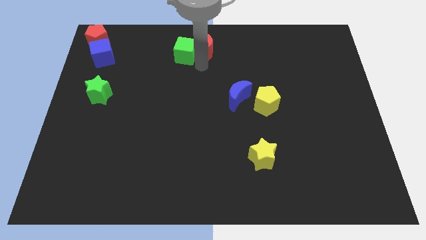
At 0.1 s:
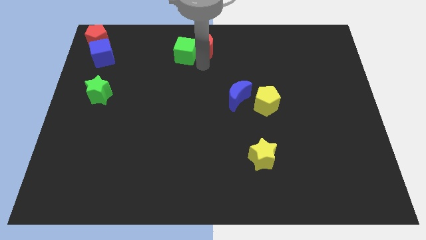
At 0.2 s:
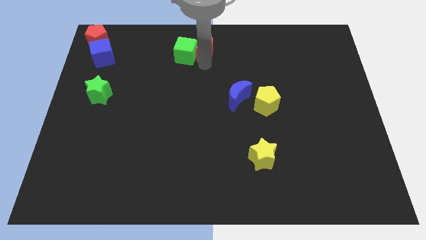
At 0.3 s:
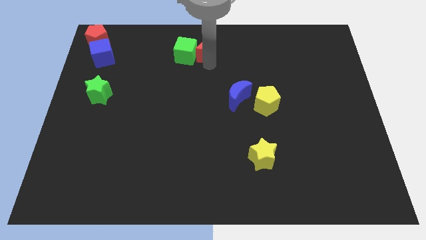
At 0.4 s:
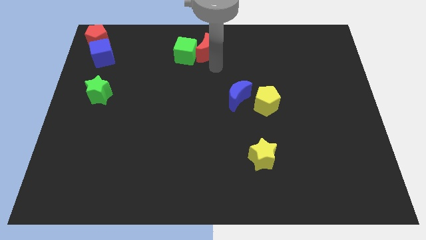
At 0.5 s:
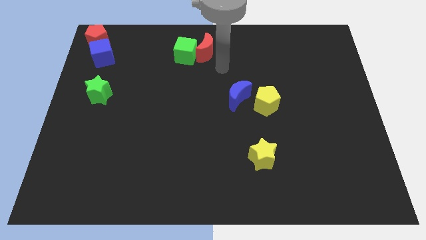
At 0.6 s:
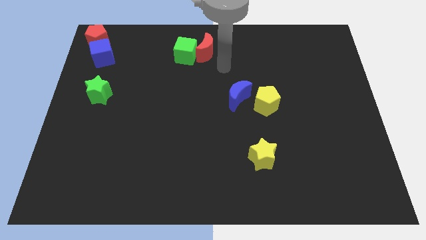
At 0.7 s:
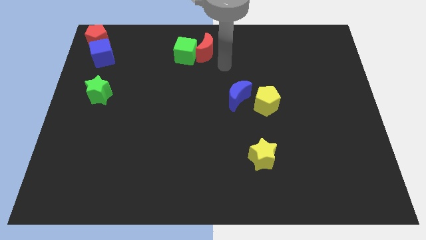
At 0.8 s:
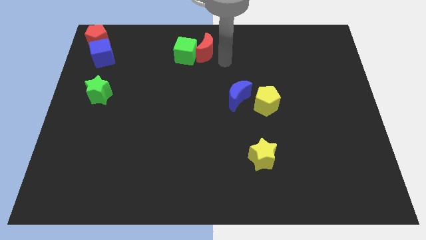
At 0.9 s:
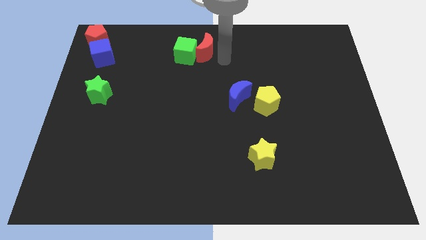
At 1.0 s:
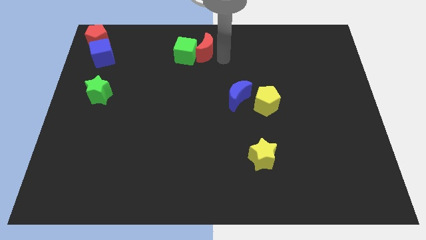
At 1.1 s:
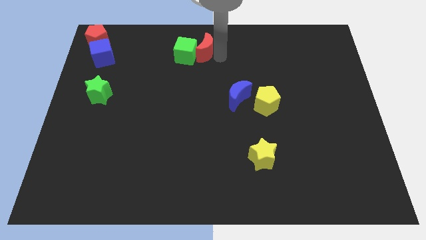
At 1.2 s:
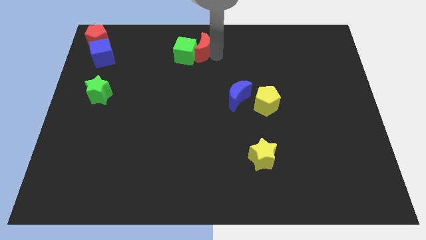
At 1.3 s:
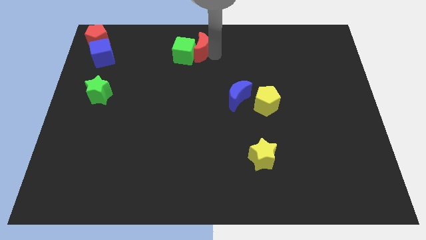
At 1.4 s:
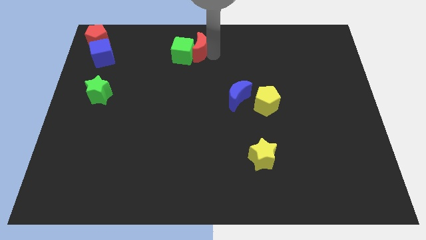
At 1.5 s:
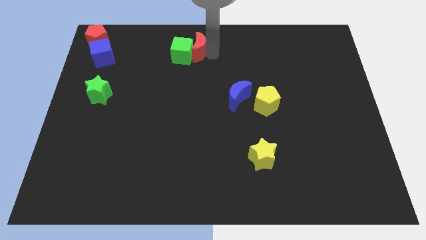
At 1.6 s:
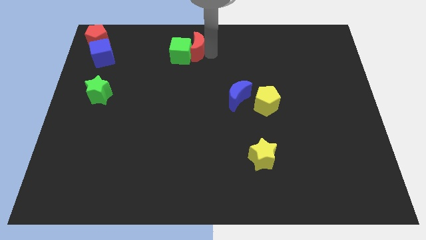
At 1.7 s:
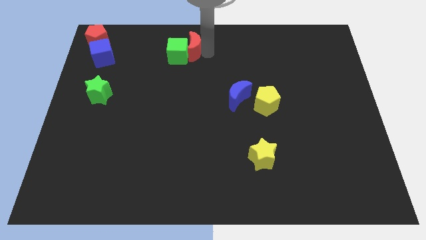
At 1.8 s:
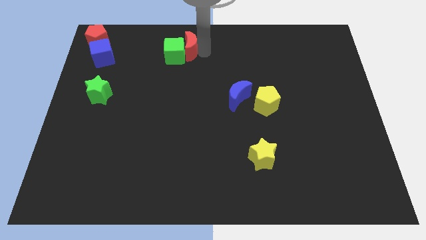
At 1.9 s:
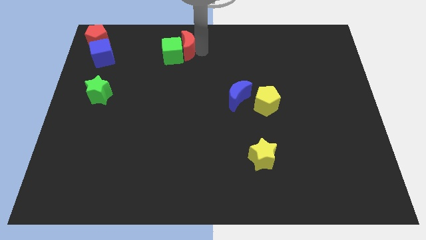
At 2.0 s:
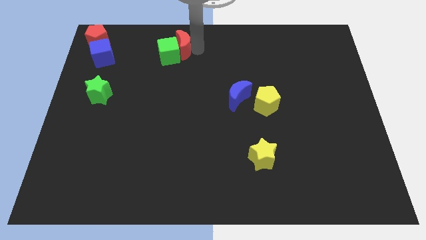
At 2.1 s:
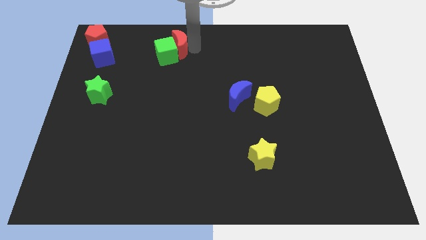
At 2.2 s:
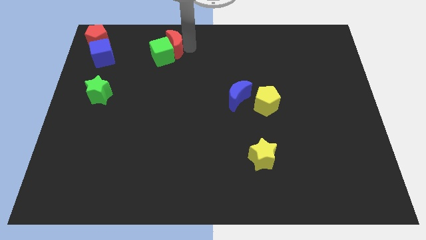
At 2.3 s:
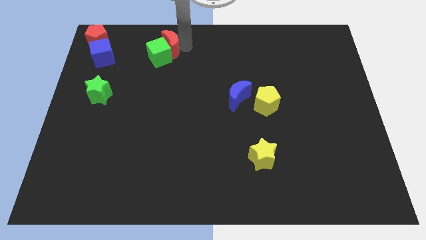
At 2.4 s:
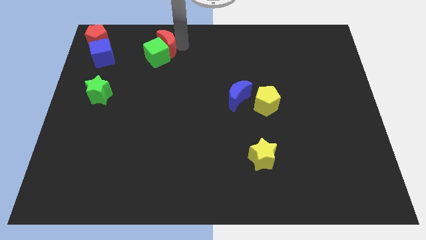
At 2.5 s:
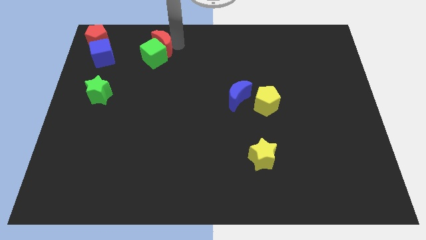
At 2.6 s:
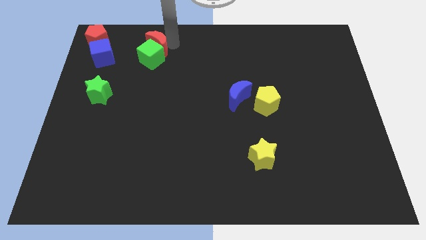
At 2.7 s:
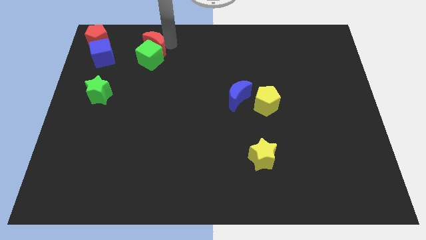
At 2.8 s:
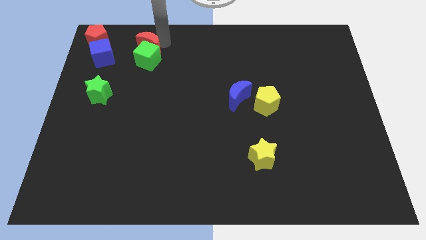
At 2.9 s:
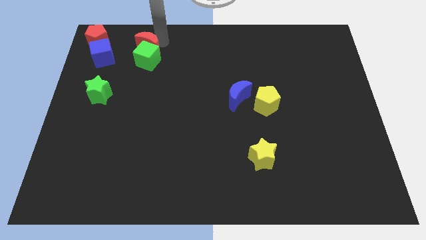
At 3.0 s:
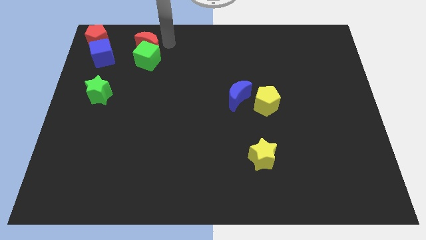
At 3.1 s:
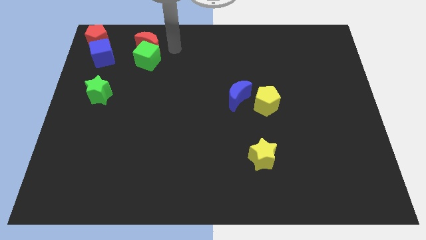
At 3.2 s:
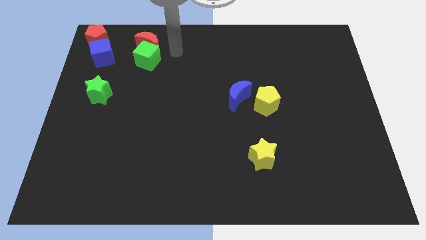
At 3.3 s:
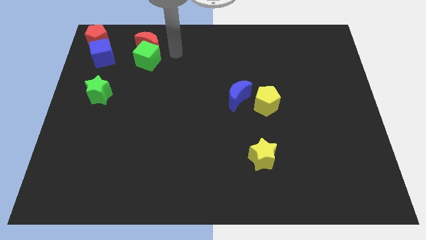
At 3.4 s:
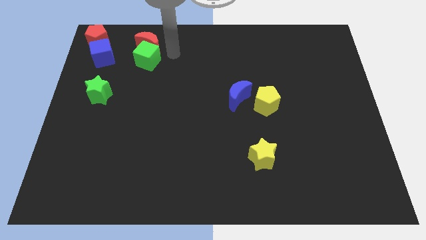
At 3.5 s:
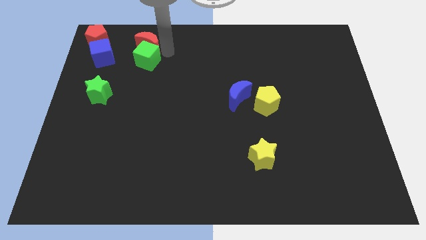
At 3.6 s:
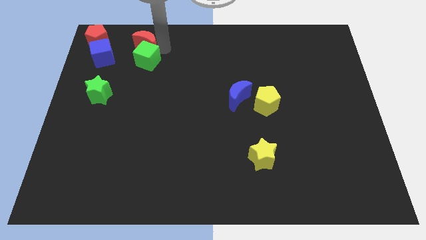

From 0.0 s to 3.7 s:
push the red moon and the green cube to the left side

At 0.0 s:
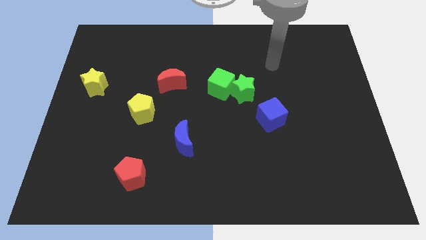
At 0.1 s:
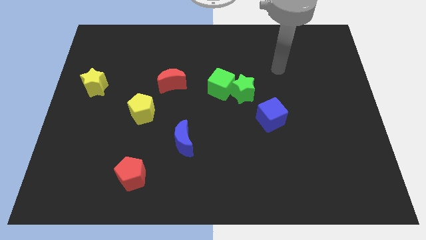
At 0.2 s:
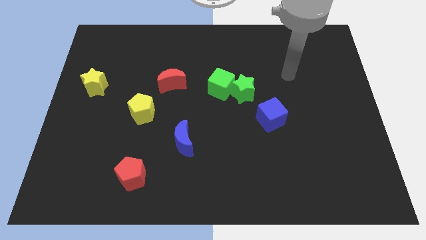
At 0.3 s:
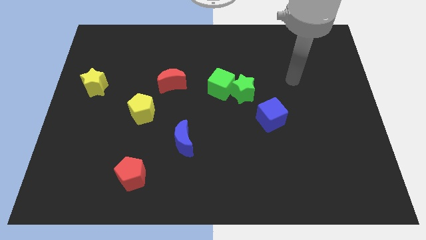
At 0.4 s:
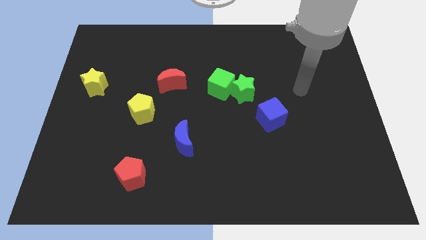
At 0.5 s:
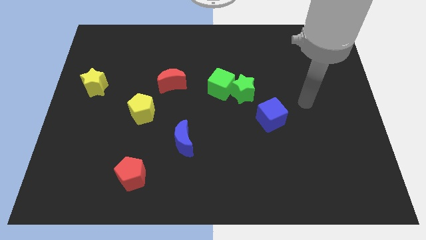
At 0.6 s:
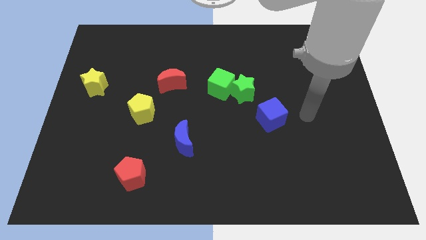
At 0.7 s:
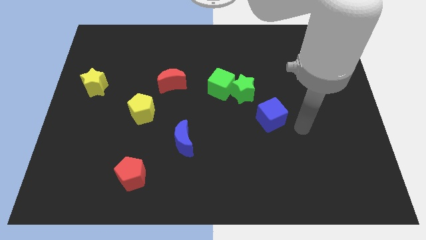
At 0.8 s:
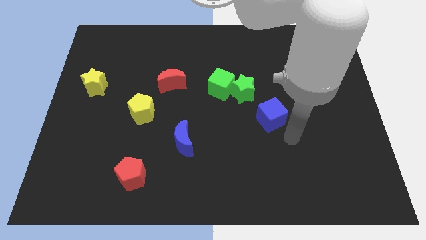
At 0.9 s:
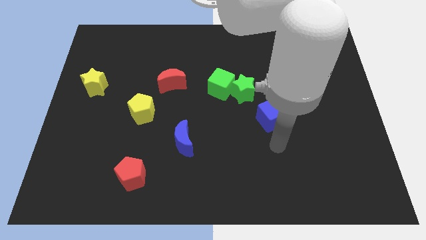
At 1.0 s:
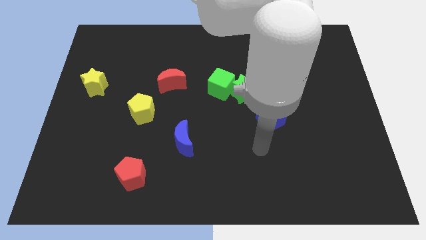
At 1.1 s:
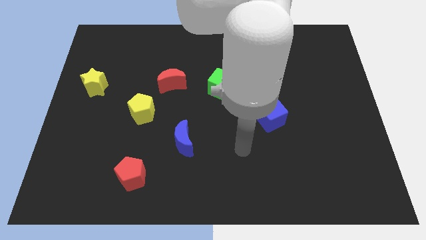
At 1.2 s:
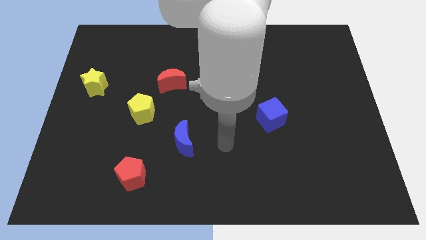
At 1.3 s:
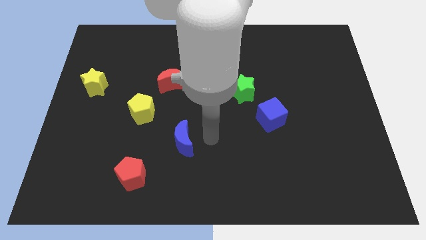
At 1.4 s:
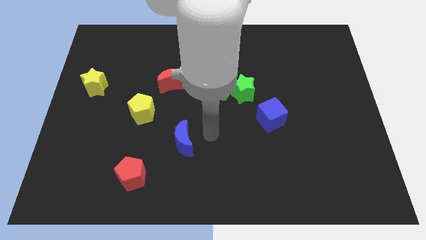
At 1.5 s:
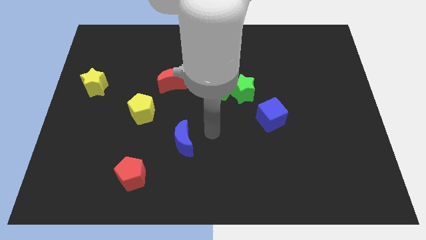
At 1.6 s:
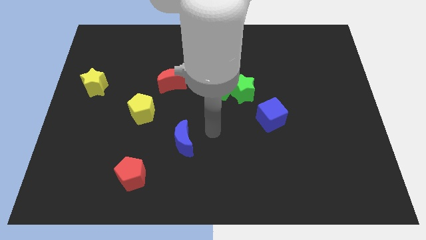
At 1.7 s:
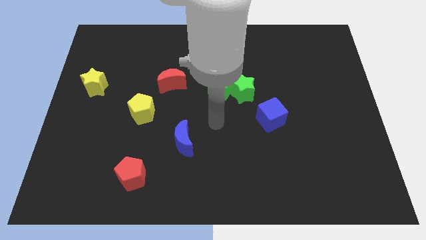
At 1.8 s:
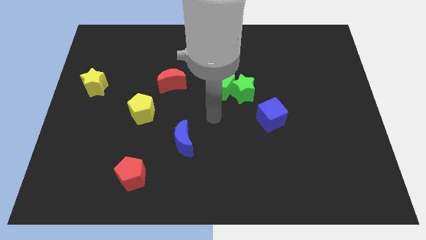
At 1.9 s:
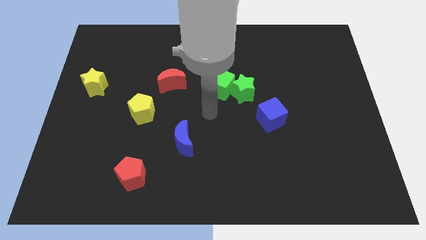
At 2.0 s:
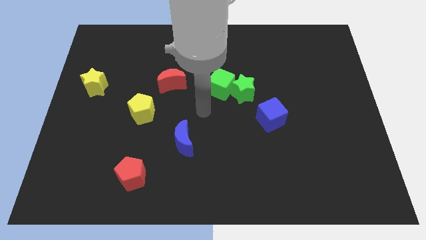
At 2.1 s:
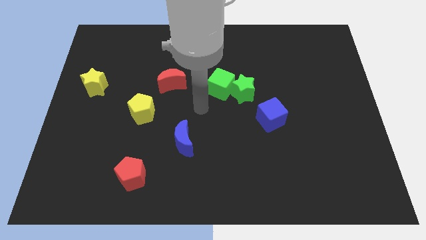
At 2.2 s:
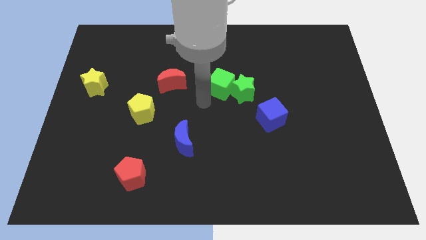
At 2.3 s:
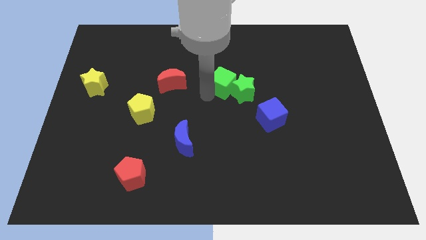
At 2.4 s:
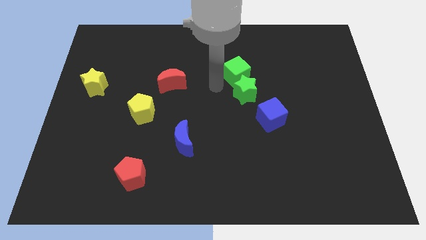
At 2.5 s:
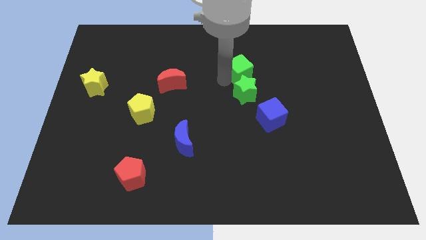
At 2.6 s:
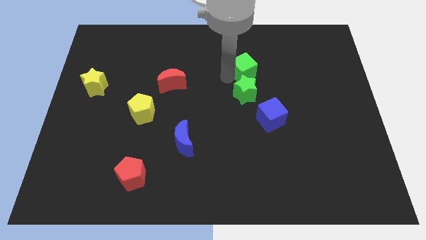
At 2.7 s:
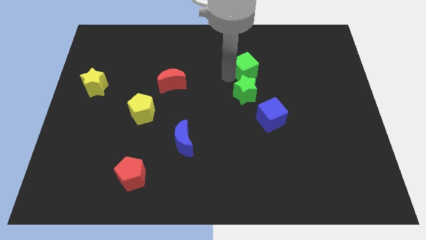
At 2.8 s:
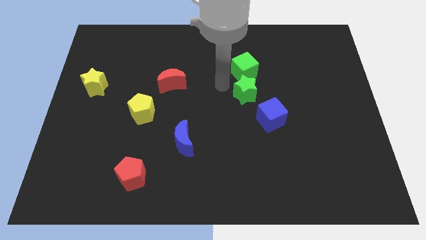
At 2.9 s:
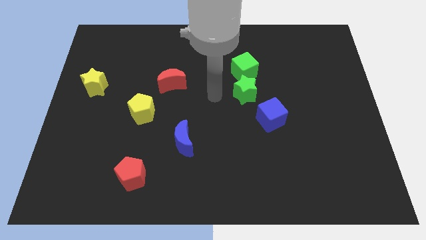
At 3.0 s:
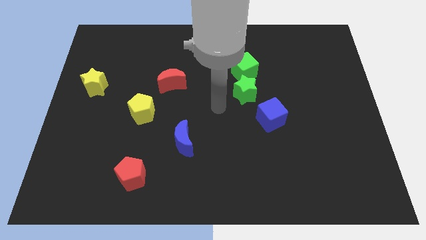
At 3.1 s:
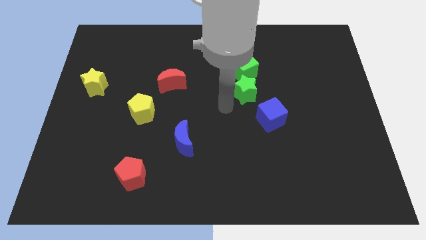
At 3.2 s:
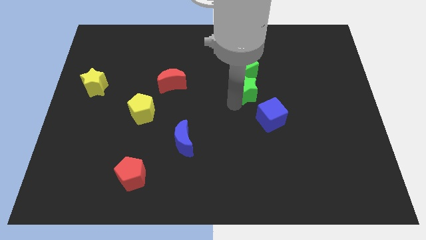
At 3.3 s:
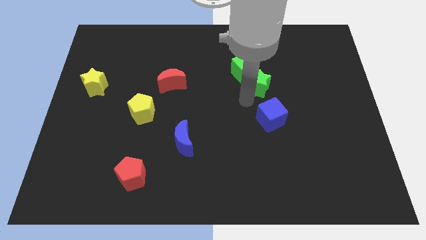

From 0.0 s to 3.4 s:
place the green star in between the green cube and blue cube

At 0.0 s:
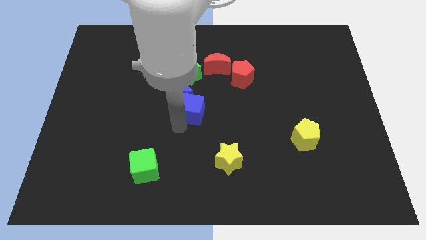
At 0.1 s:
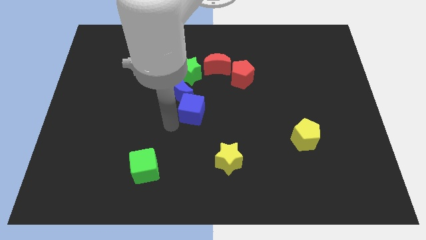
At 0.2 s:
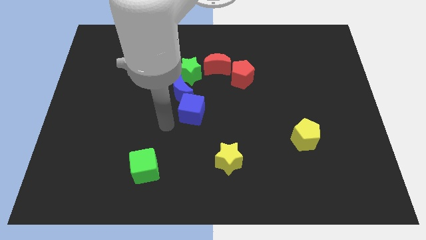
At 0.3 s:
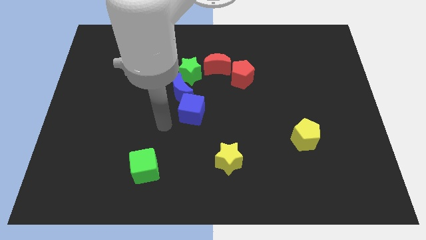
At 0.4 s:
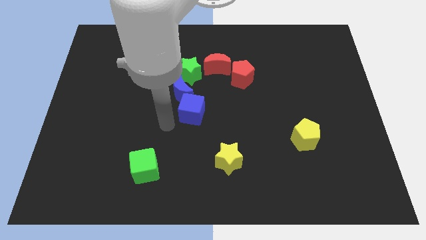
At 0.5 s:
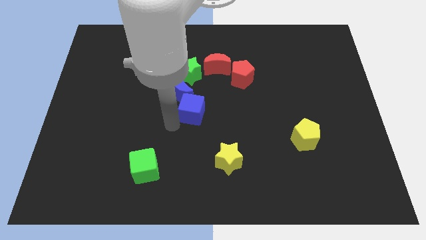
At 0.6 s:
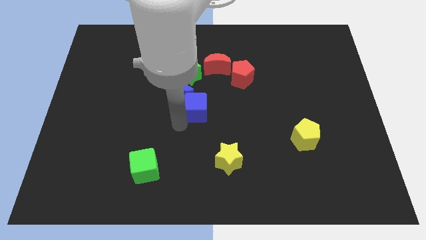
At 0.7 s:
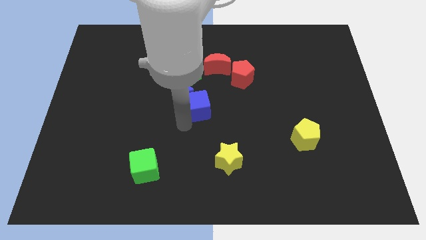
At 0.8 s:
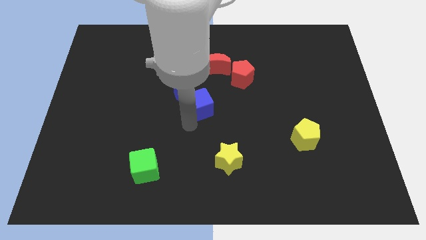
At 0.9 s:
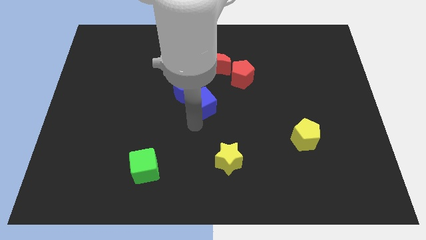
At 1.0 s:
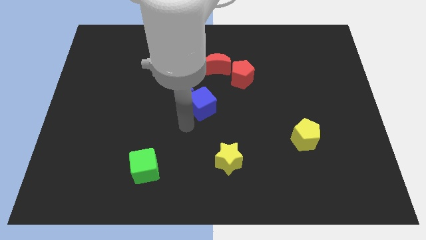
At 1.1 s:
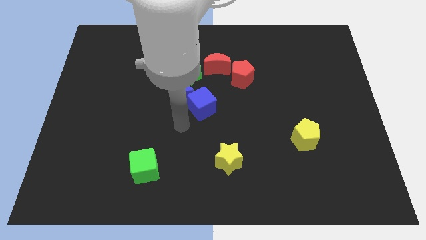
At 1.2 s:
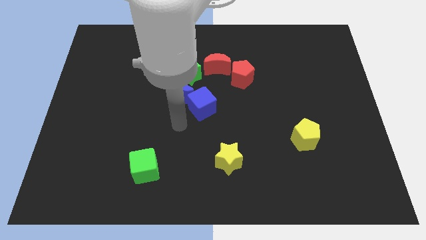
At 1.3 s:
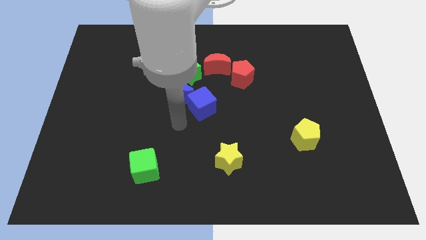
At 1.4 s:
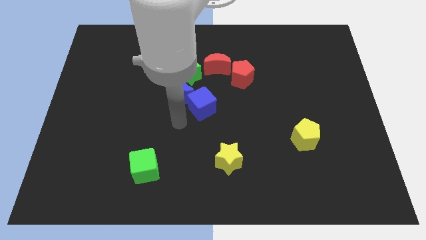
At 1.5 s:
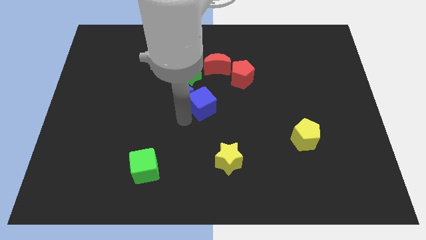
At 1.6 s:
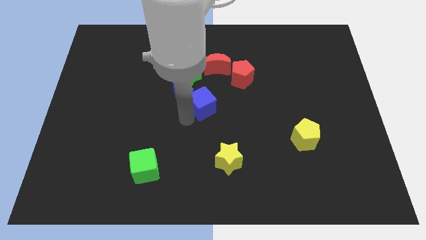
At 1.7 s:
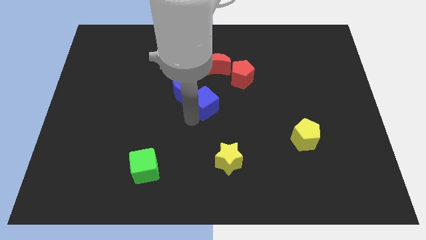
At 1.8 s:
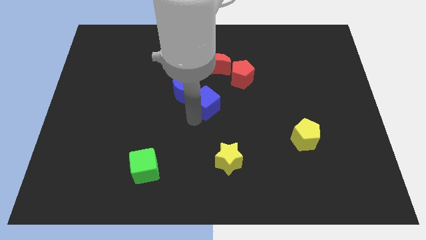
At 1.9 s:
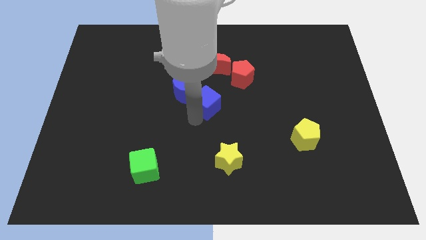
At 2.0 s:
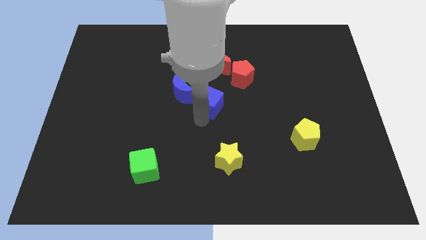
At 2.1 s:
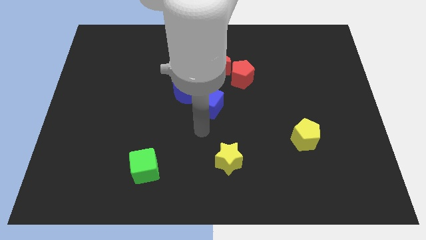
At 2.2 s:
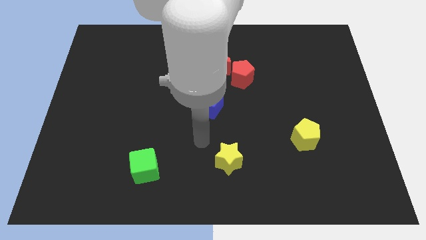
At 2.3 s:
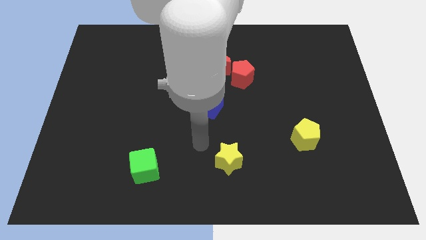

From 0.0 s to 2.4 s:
place blue cube at the center of the board
